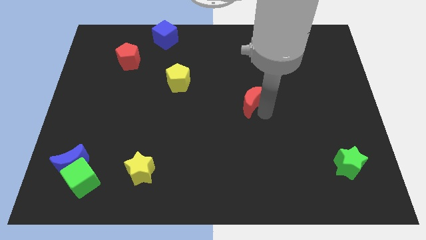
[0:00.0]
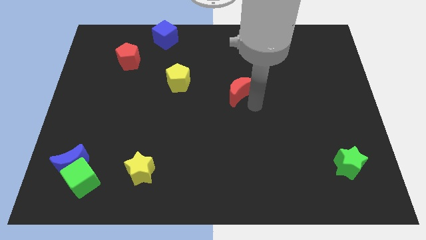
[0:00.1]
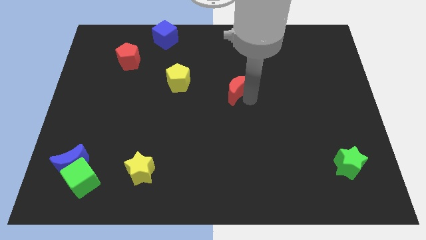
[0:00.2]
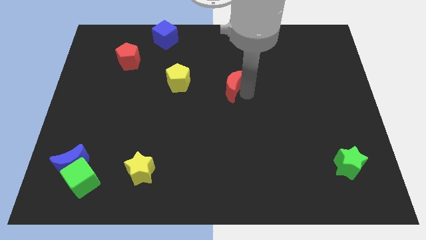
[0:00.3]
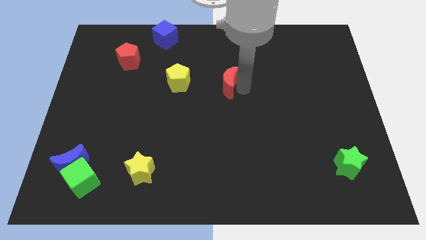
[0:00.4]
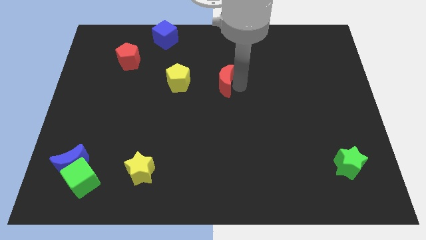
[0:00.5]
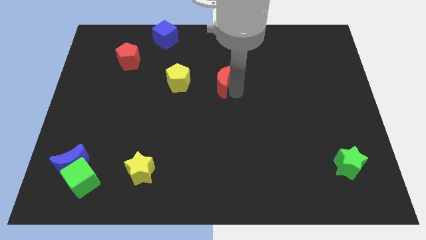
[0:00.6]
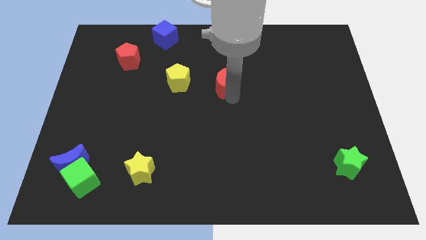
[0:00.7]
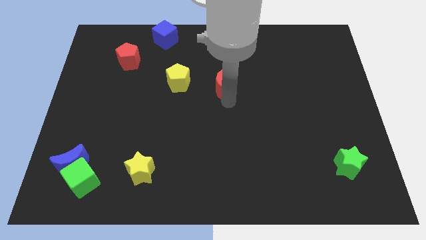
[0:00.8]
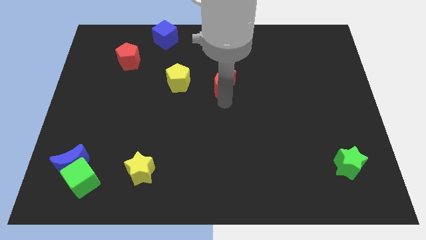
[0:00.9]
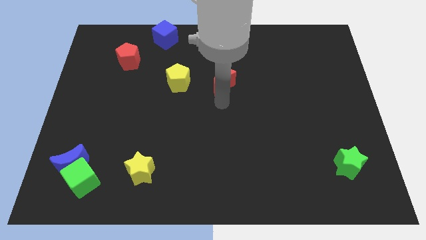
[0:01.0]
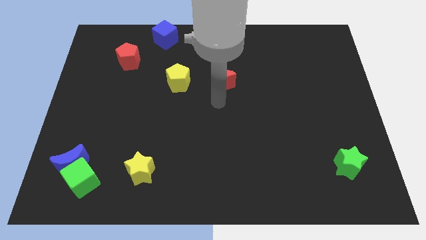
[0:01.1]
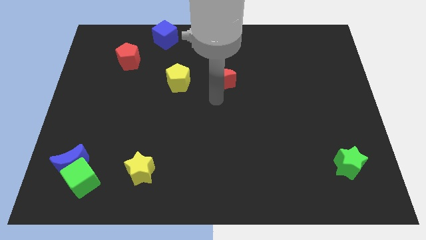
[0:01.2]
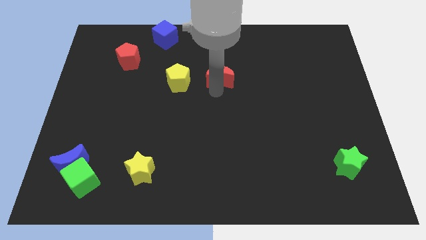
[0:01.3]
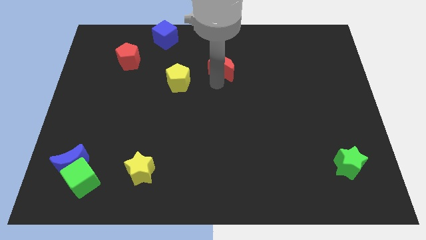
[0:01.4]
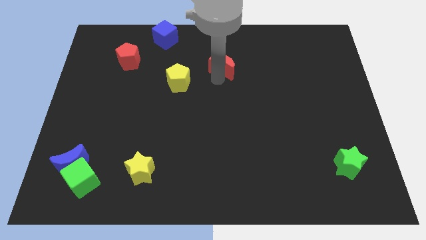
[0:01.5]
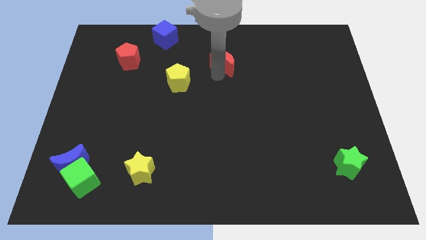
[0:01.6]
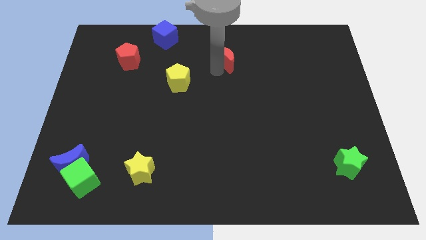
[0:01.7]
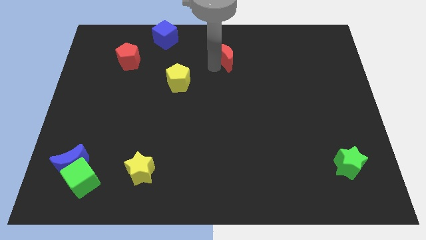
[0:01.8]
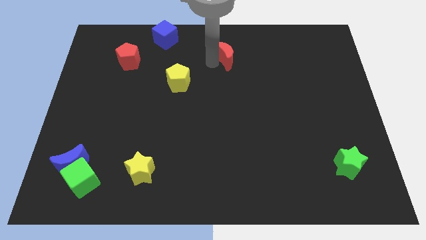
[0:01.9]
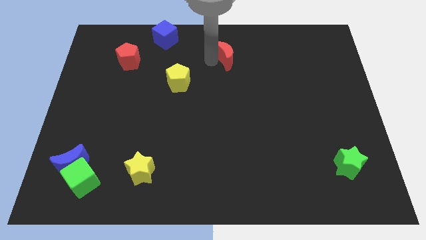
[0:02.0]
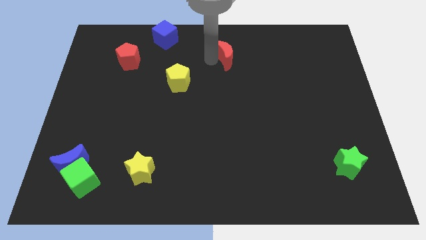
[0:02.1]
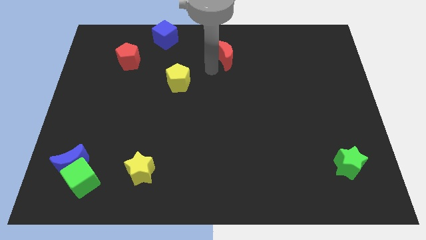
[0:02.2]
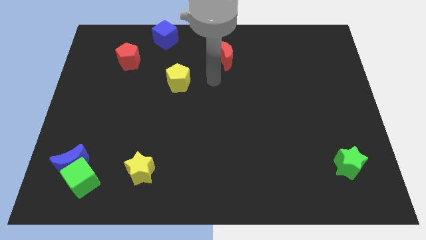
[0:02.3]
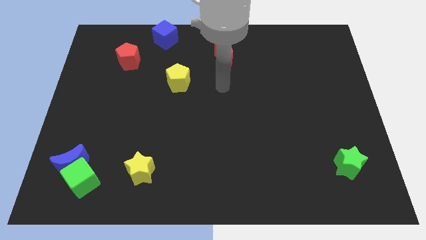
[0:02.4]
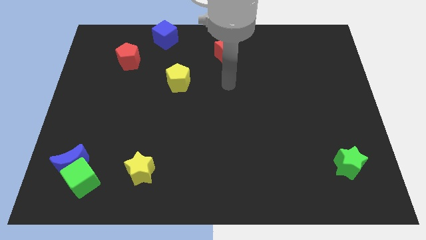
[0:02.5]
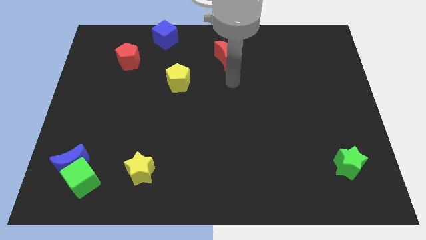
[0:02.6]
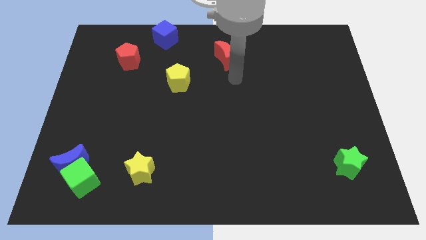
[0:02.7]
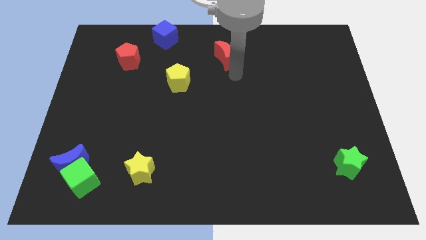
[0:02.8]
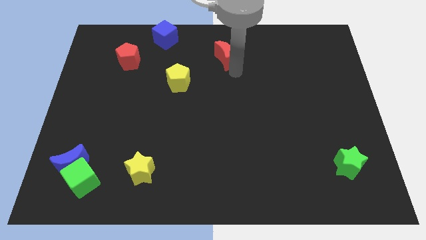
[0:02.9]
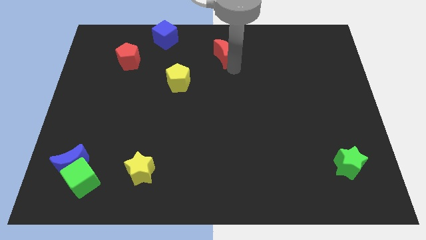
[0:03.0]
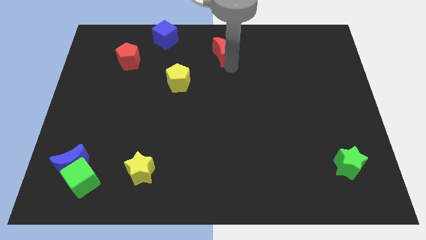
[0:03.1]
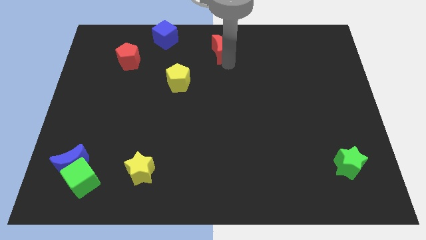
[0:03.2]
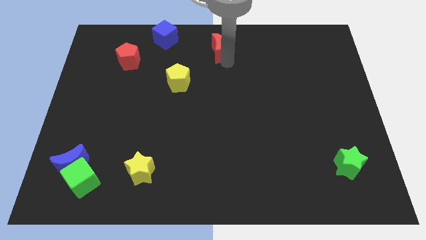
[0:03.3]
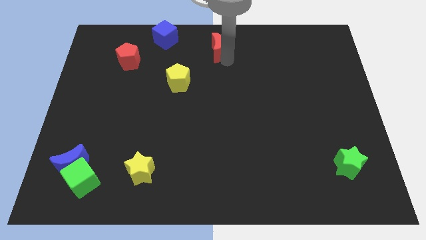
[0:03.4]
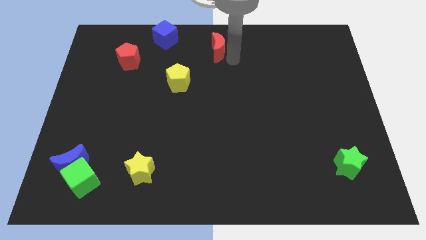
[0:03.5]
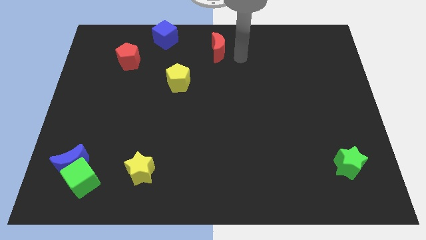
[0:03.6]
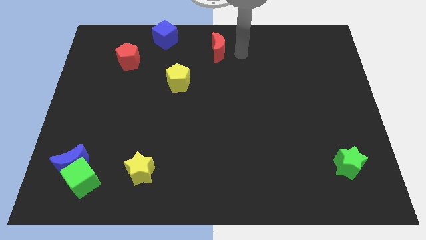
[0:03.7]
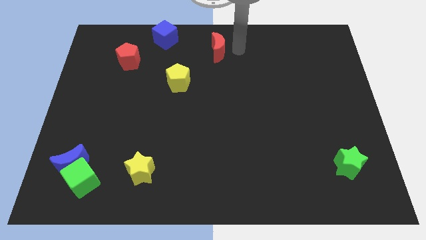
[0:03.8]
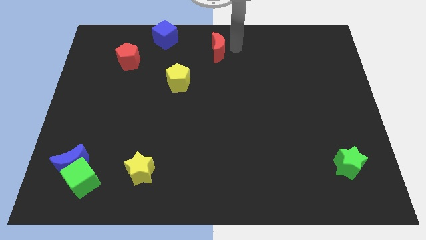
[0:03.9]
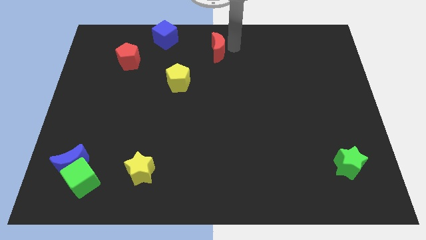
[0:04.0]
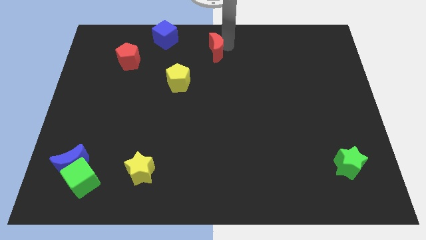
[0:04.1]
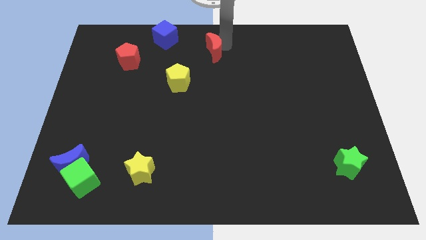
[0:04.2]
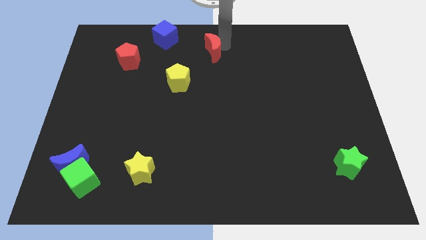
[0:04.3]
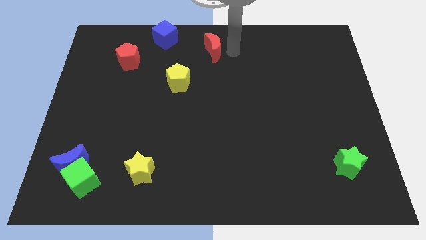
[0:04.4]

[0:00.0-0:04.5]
move the red crescent to the top center of the table

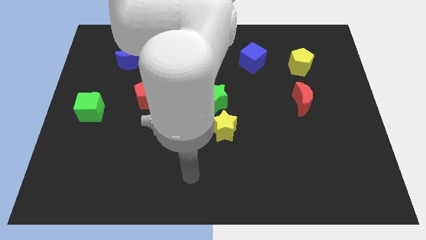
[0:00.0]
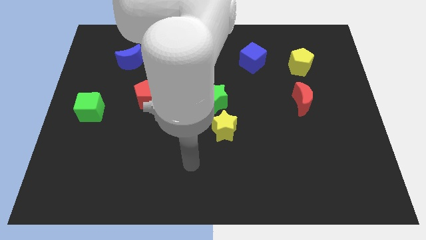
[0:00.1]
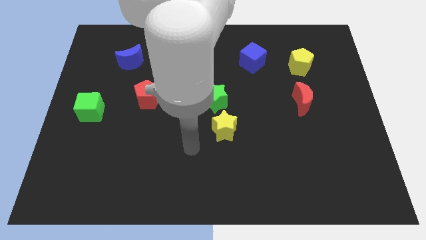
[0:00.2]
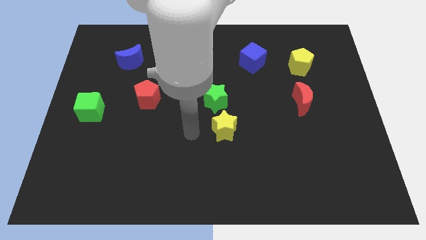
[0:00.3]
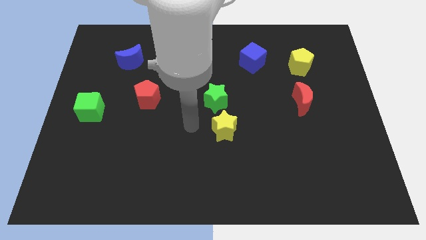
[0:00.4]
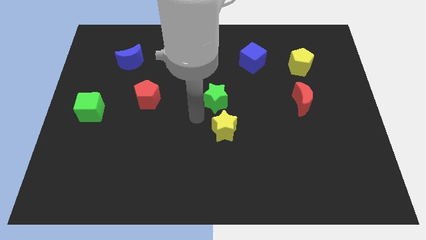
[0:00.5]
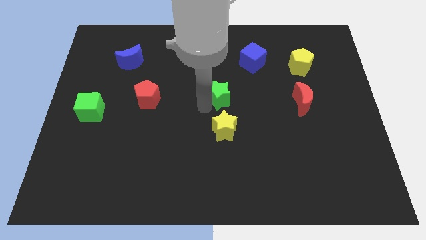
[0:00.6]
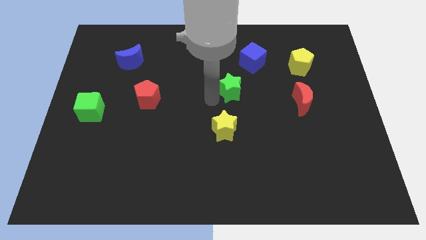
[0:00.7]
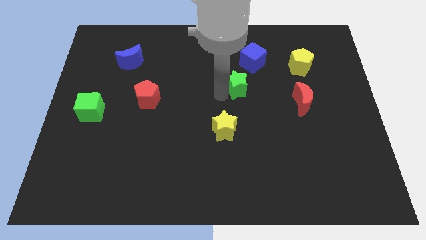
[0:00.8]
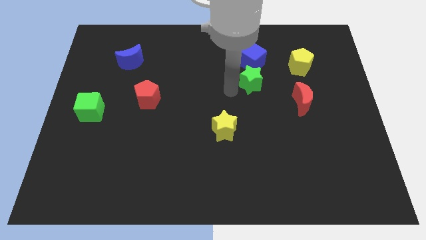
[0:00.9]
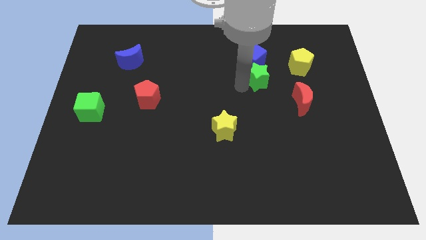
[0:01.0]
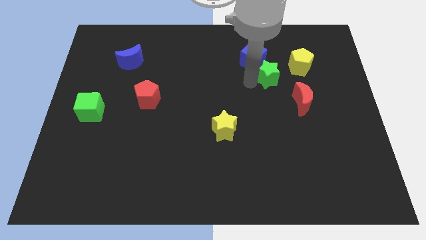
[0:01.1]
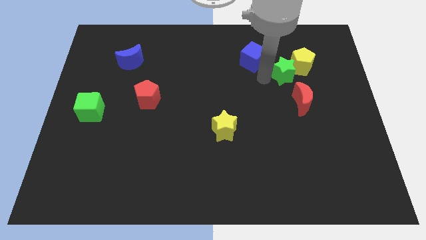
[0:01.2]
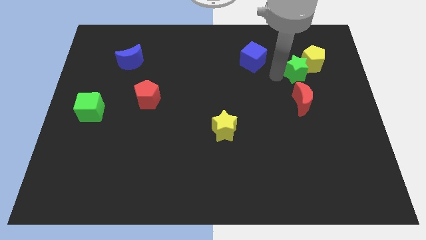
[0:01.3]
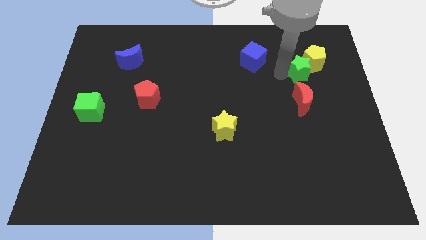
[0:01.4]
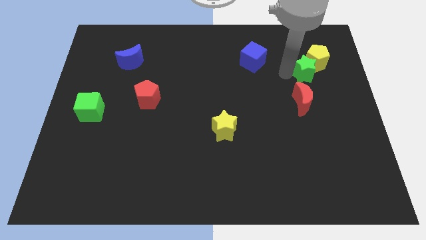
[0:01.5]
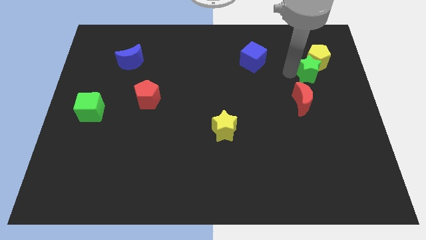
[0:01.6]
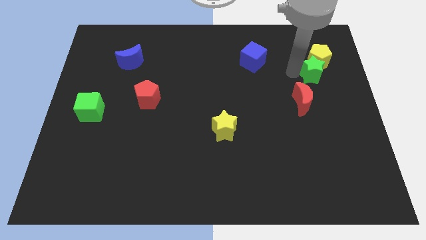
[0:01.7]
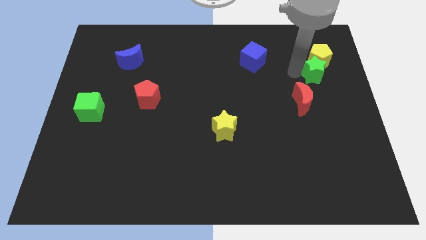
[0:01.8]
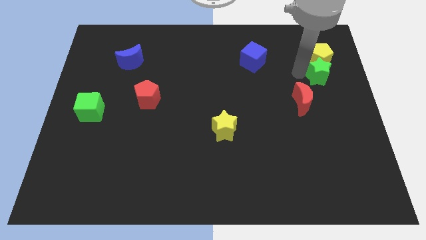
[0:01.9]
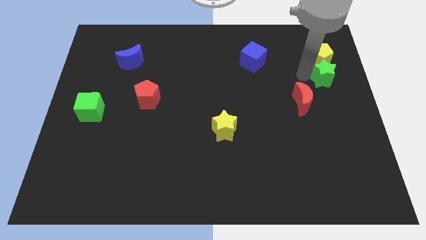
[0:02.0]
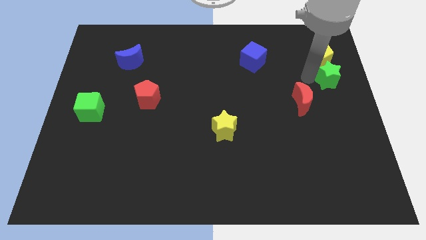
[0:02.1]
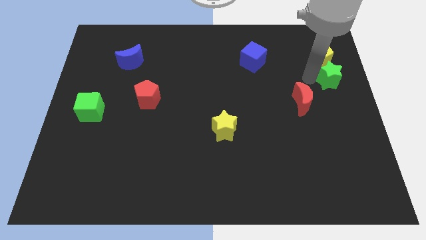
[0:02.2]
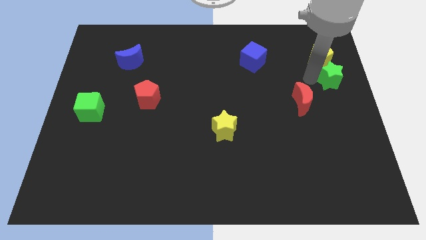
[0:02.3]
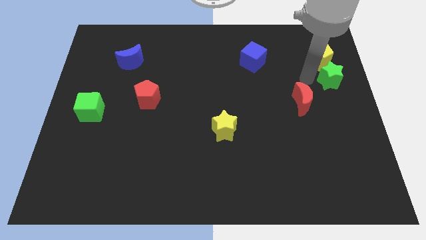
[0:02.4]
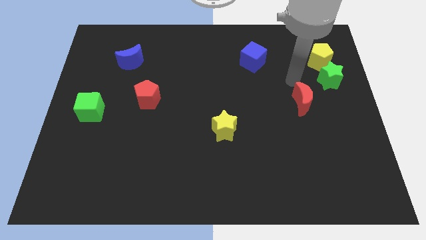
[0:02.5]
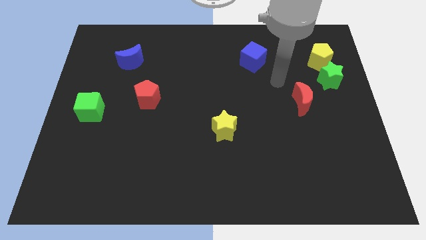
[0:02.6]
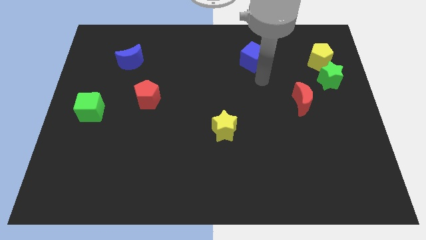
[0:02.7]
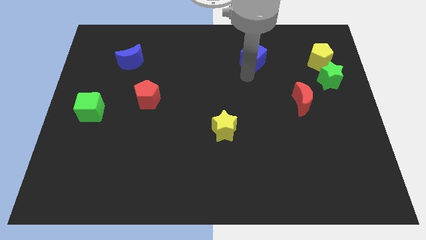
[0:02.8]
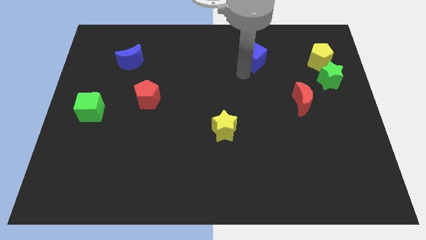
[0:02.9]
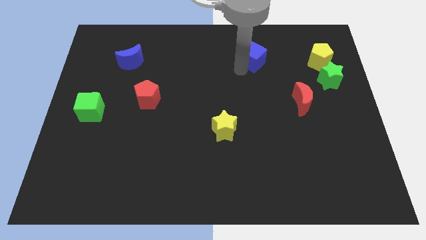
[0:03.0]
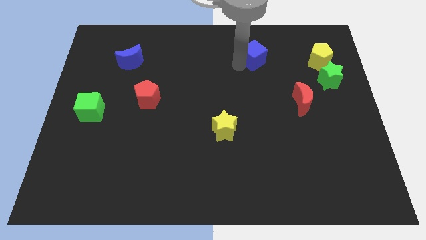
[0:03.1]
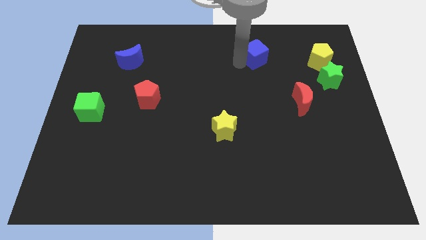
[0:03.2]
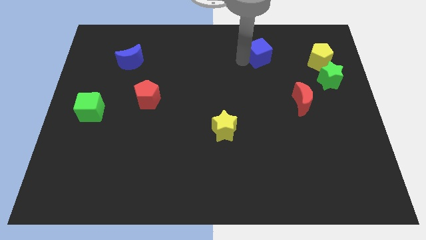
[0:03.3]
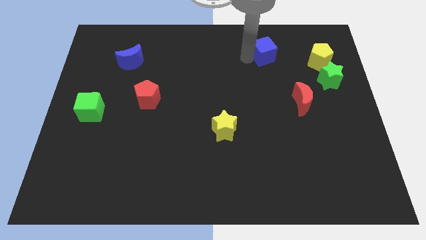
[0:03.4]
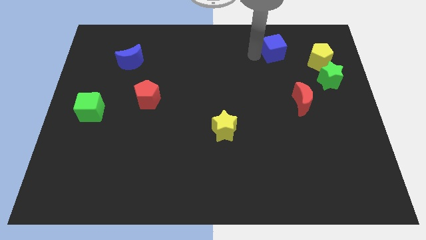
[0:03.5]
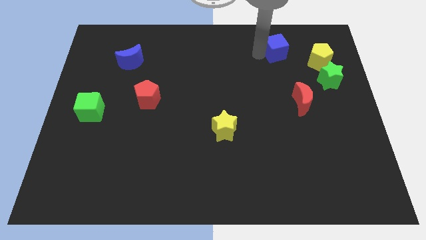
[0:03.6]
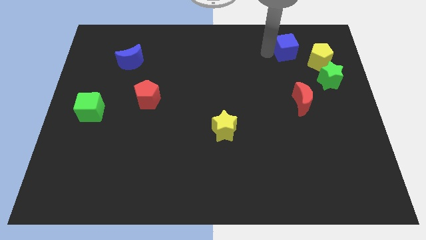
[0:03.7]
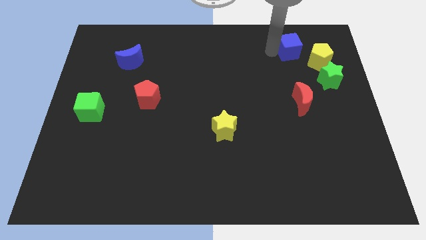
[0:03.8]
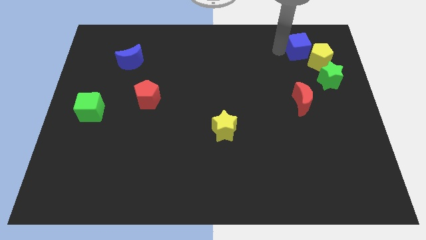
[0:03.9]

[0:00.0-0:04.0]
place blue cube close to yellow pentagon

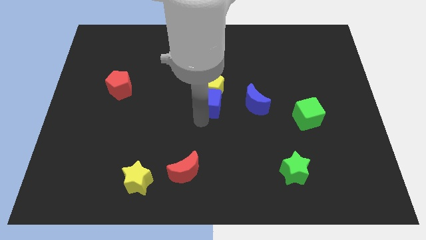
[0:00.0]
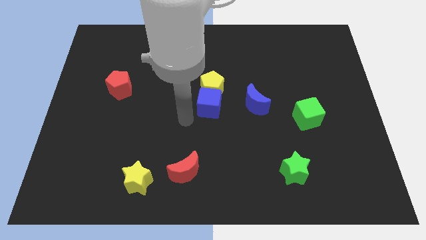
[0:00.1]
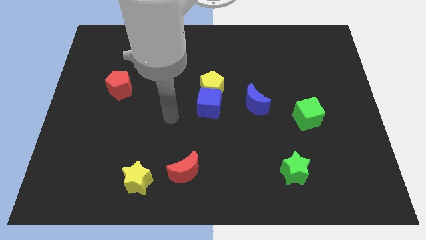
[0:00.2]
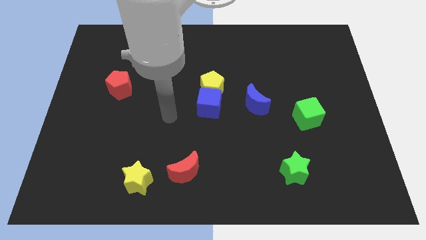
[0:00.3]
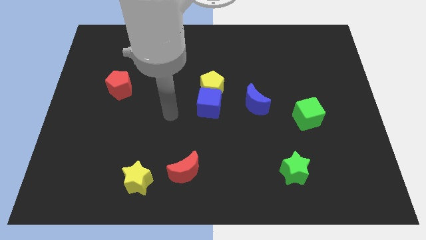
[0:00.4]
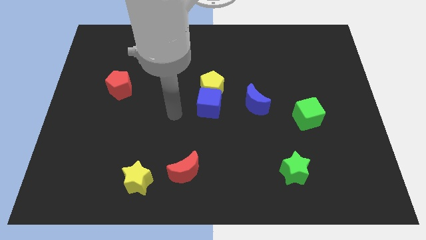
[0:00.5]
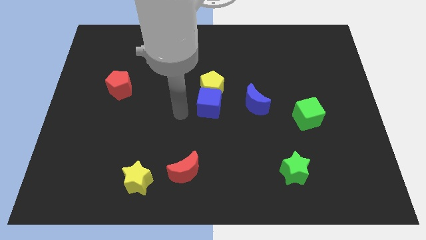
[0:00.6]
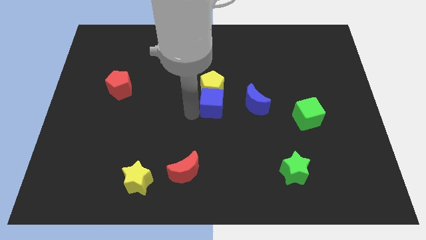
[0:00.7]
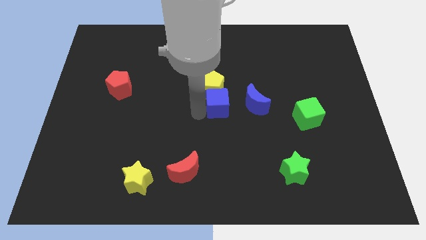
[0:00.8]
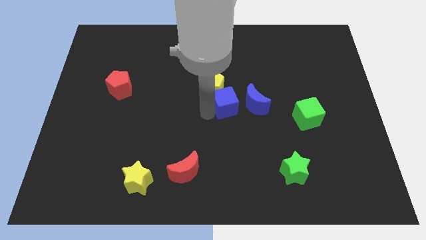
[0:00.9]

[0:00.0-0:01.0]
move blue cube slightly to the right
